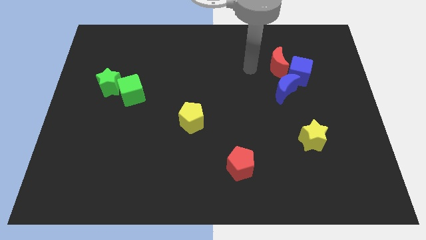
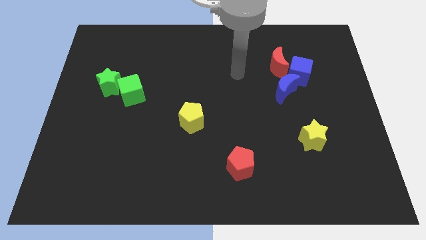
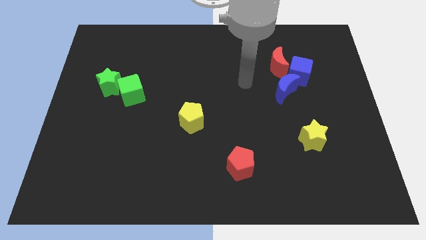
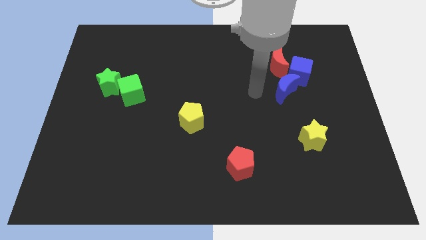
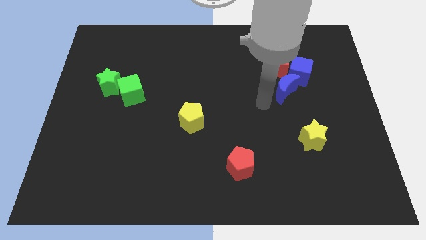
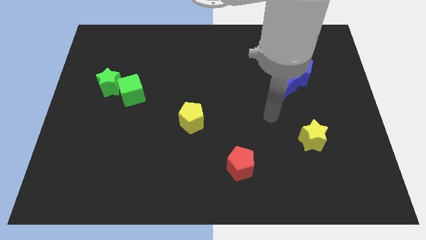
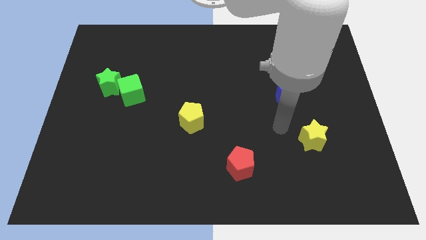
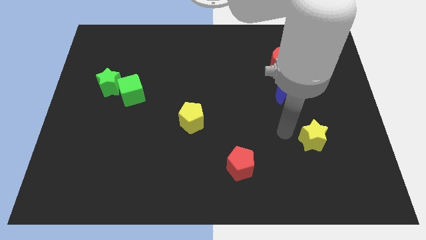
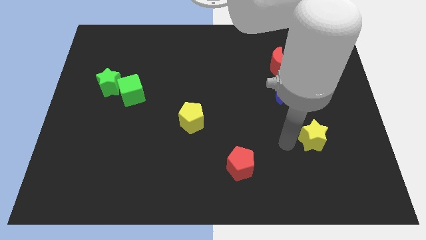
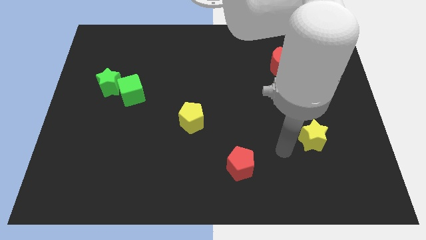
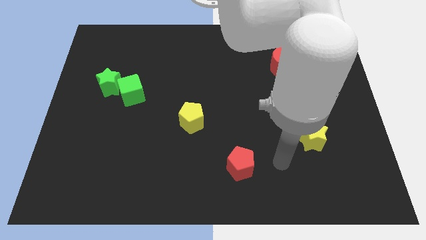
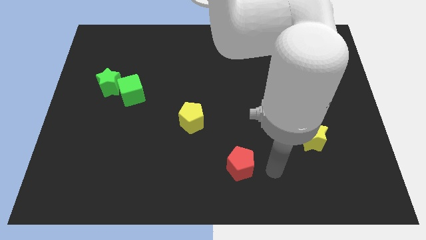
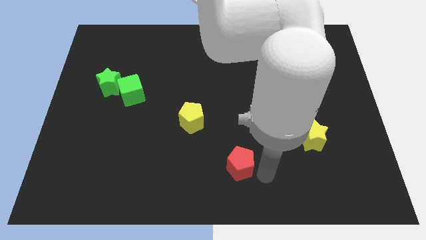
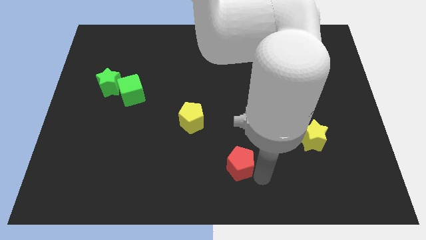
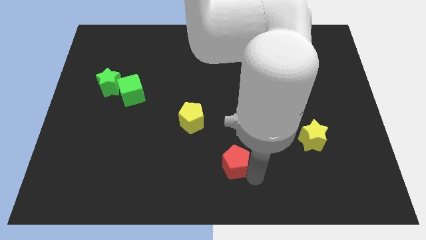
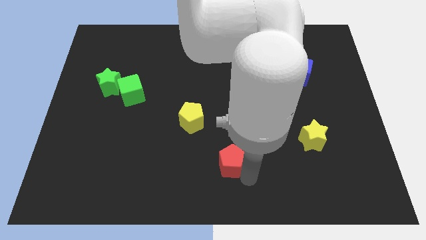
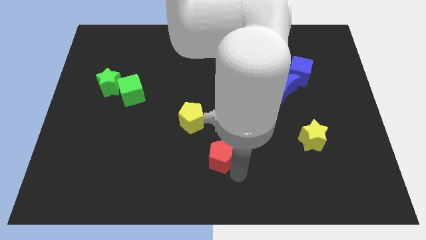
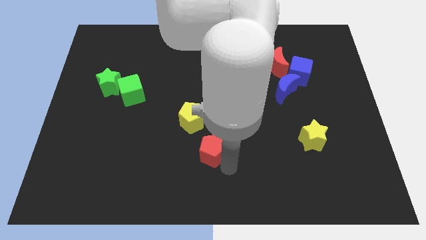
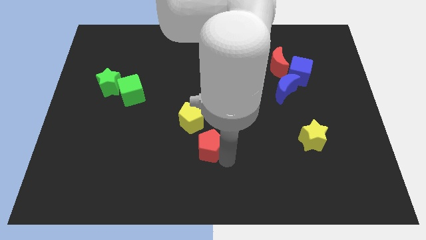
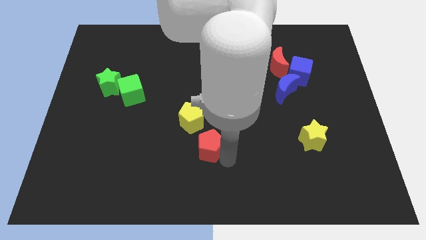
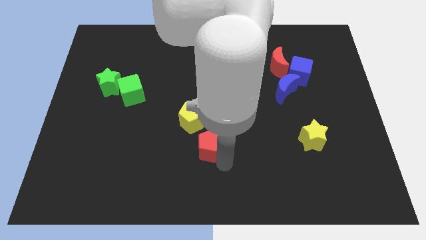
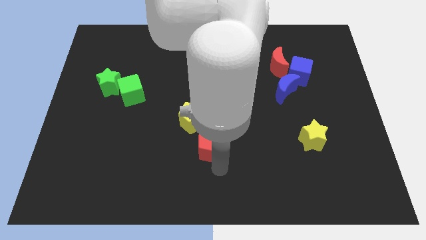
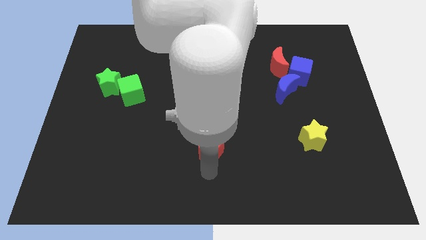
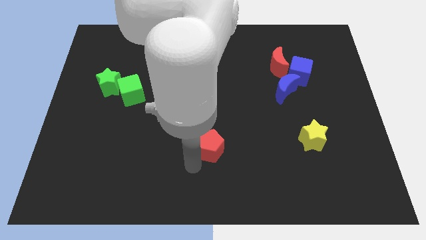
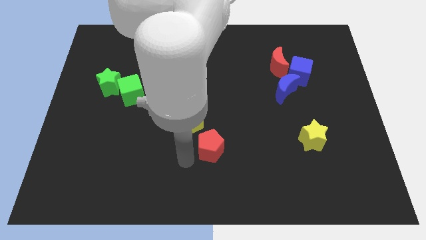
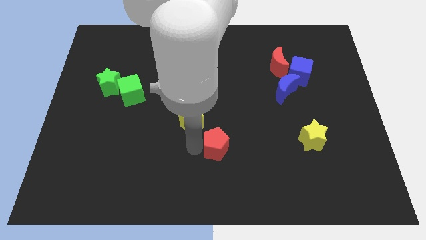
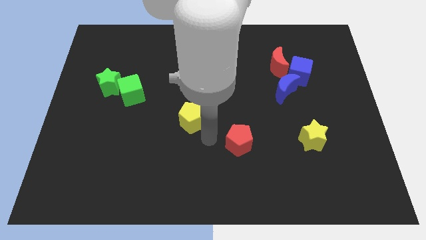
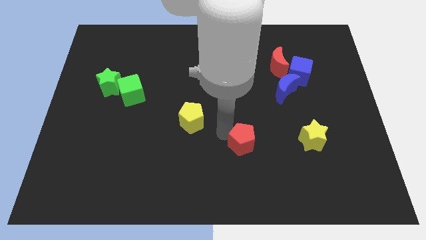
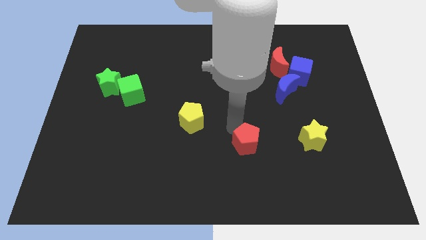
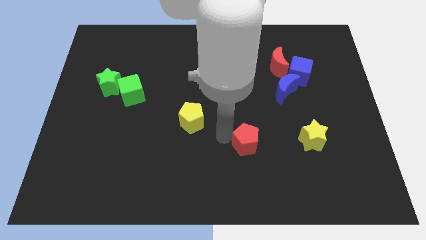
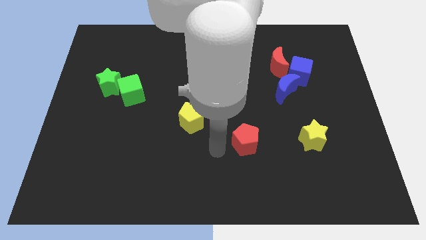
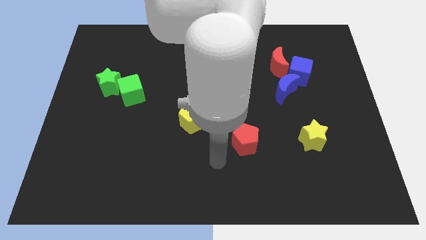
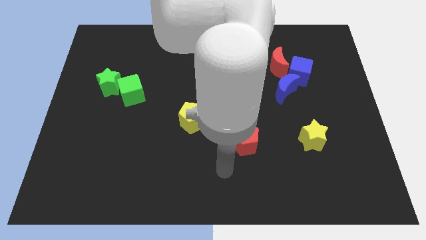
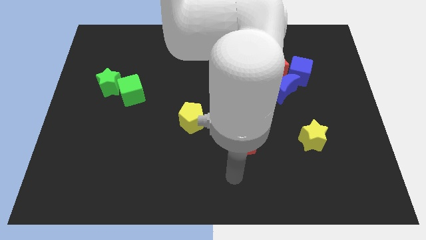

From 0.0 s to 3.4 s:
place red pentagon to the left of yelloe star

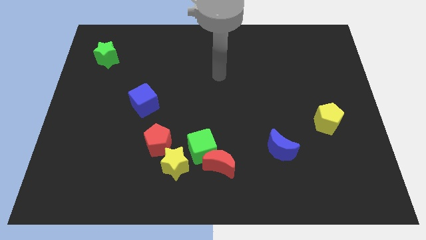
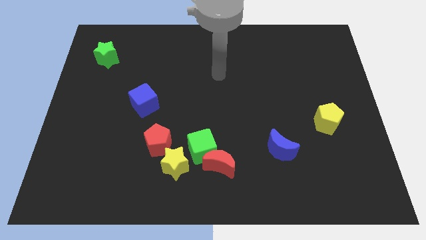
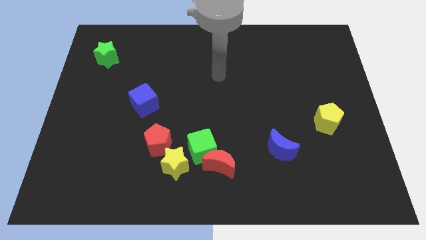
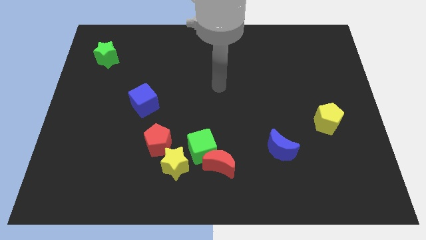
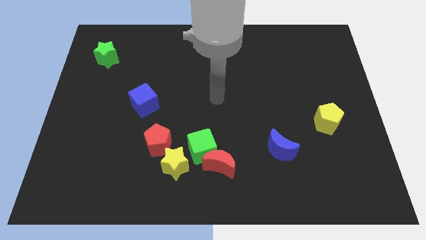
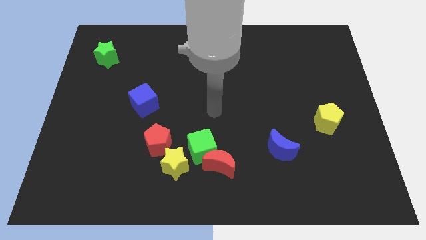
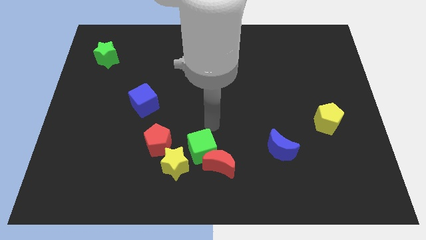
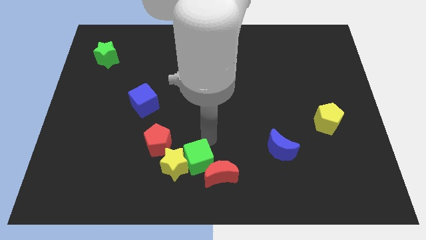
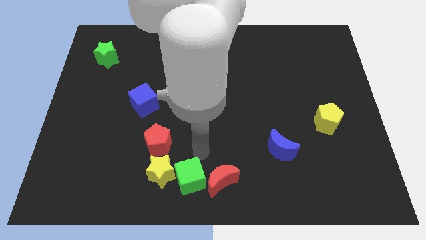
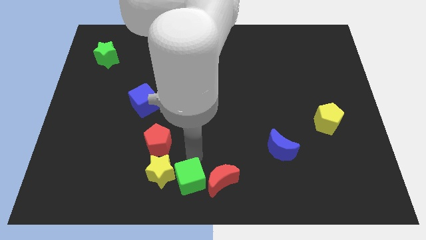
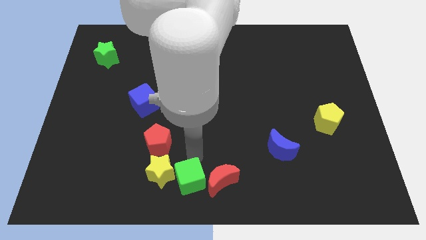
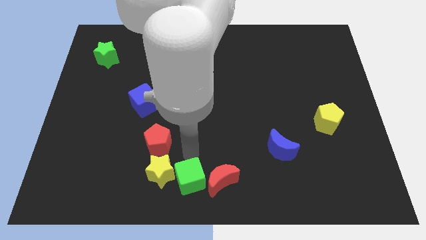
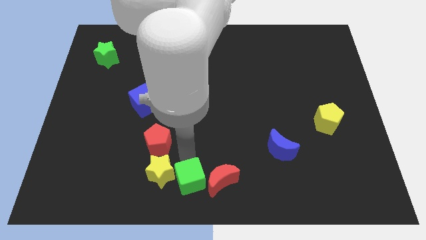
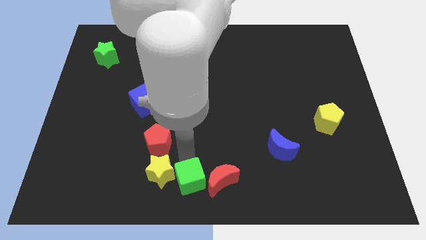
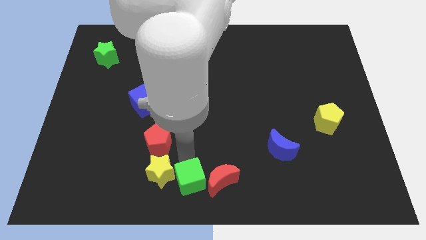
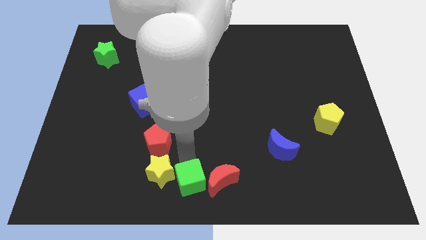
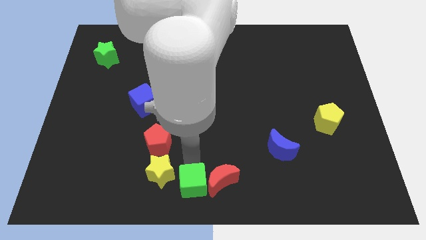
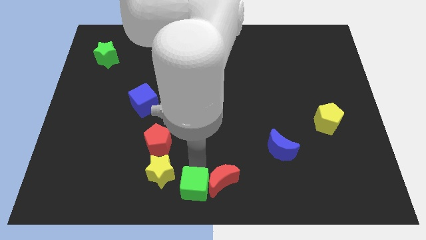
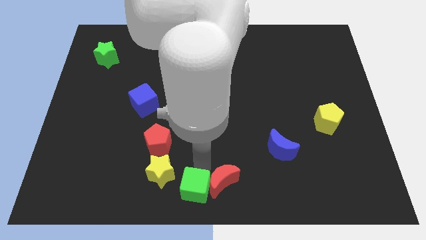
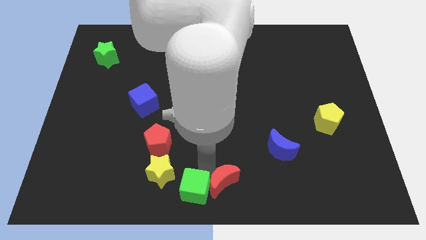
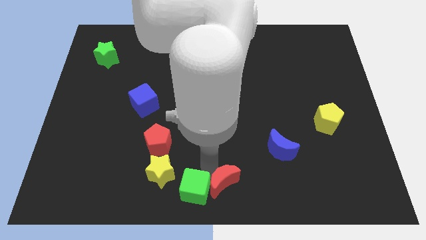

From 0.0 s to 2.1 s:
slide the green cube towards the bottom center

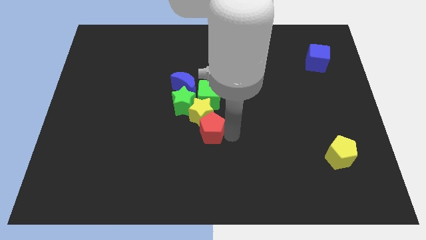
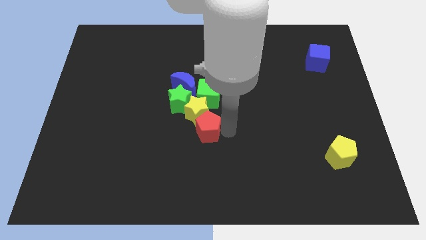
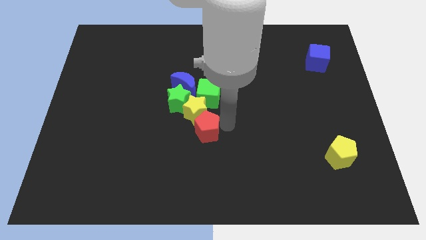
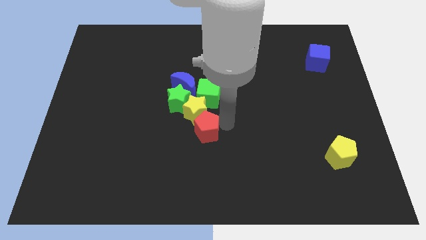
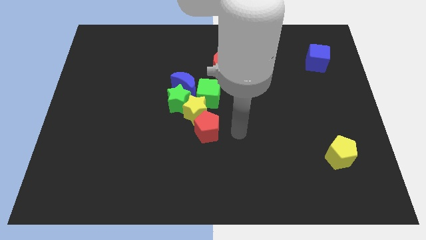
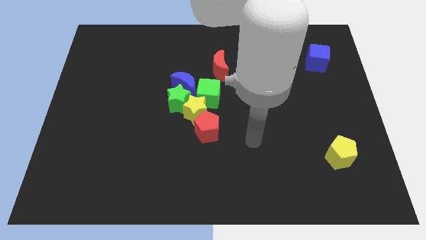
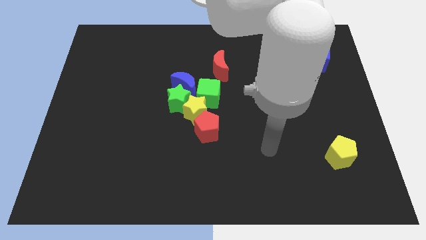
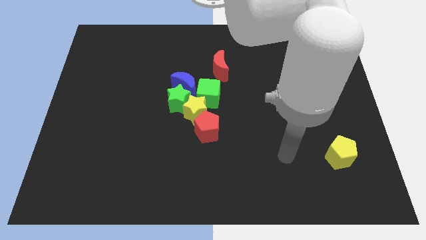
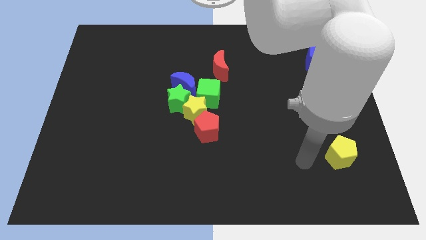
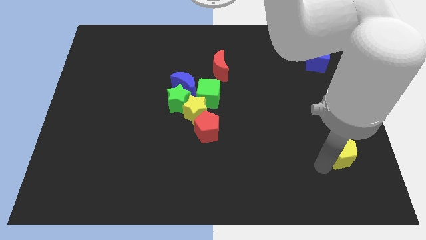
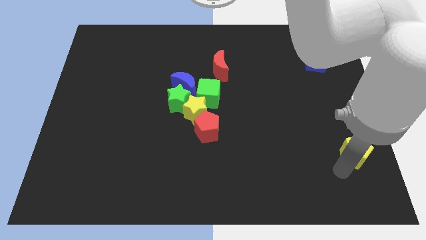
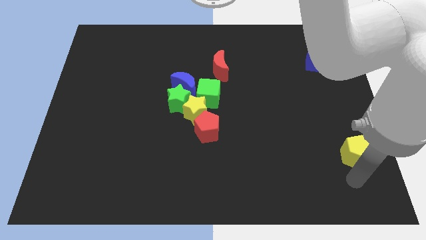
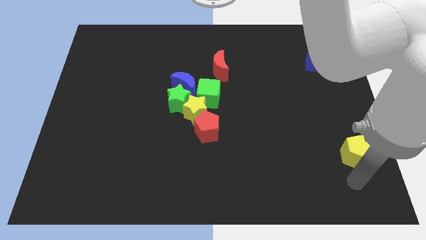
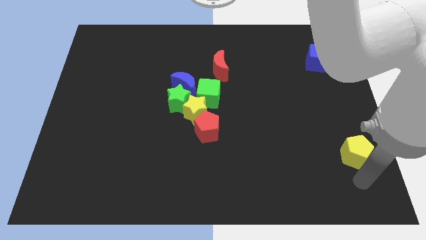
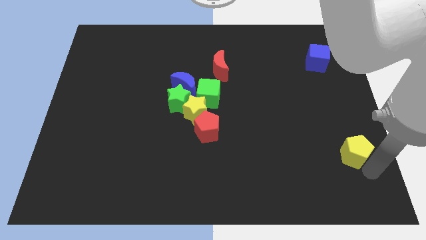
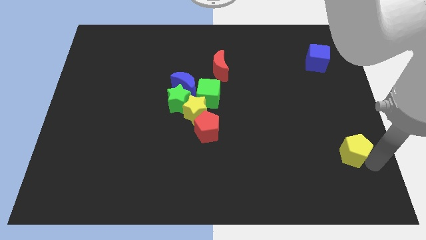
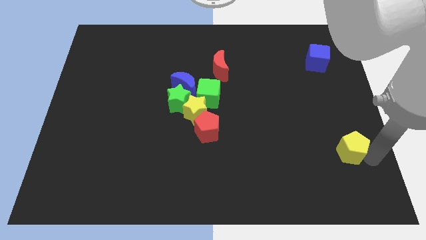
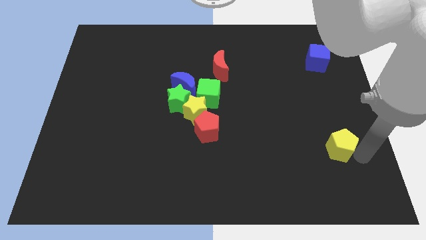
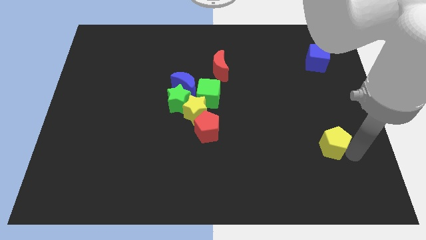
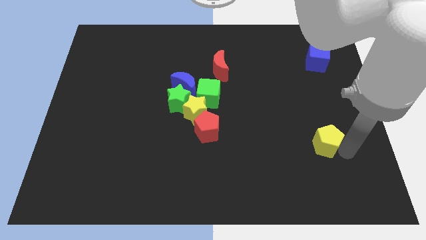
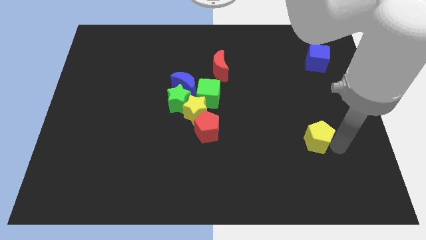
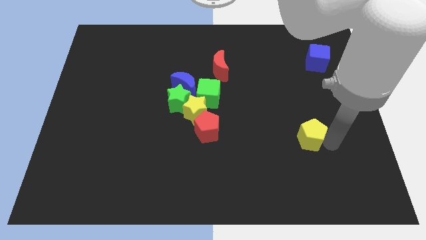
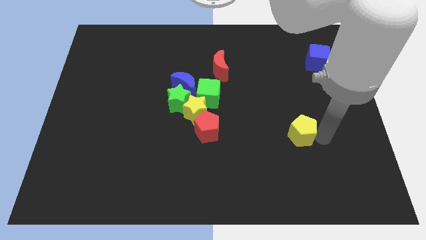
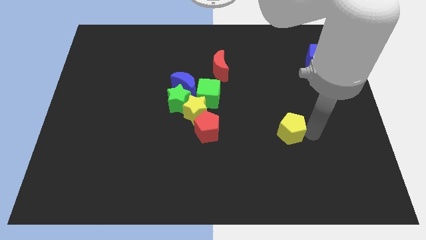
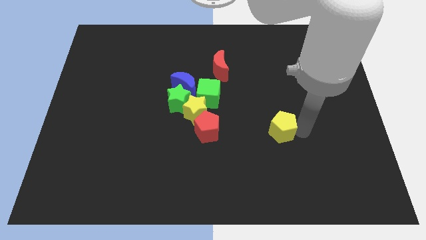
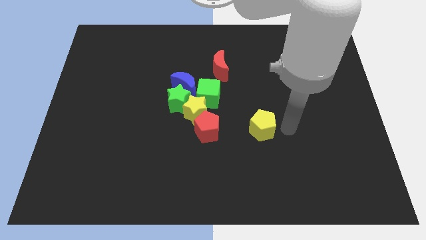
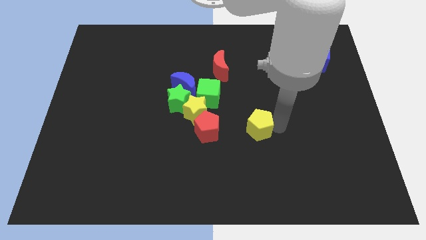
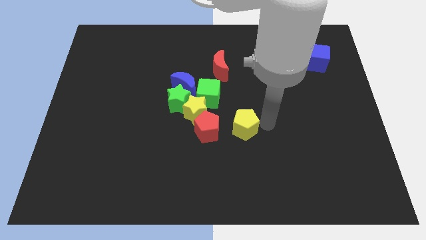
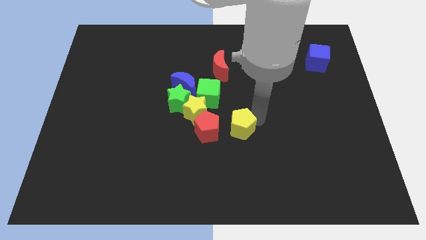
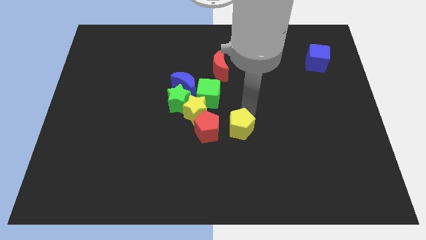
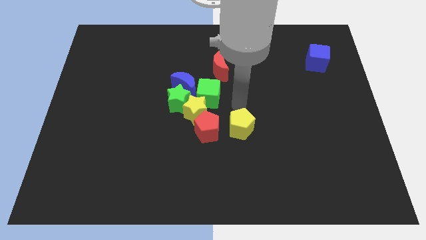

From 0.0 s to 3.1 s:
place the yellow pentagon to the right of red pentagon

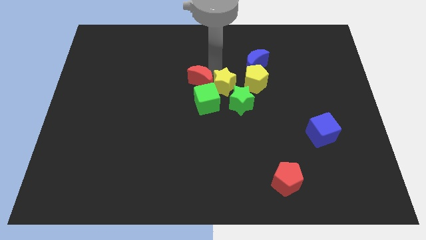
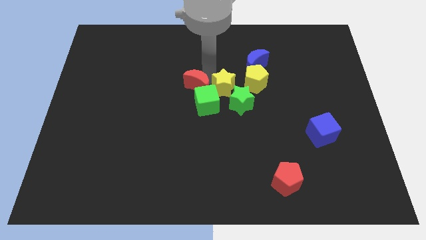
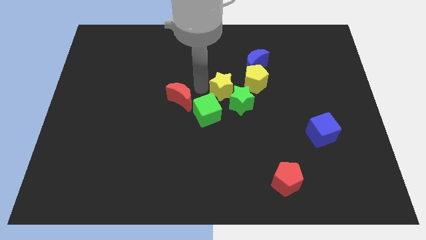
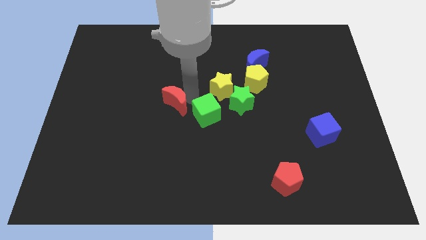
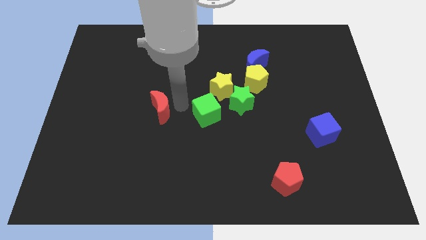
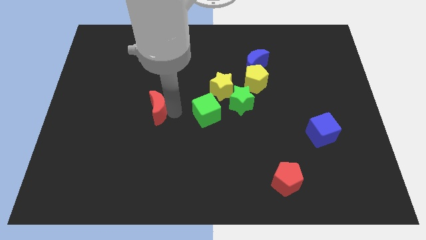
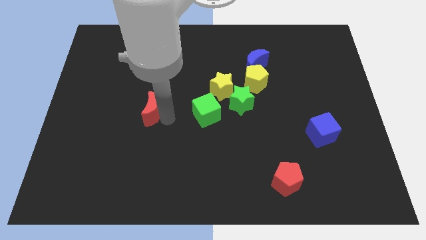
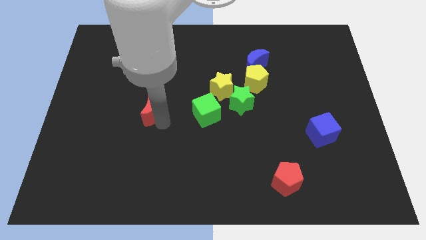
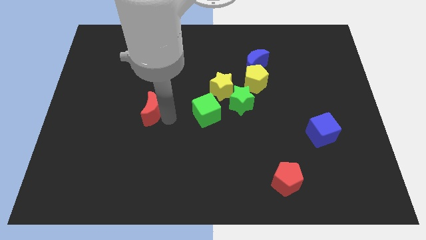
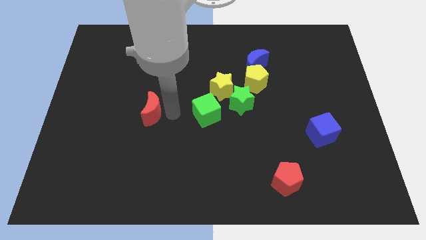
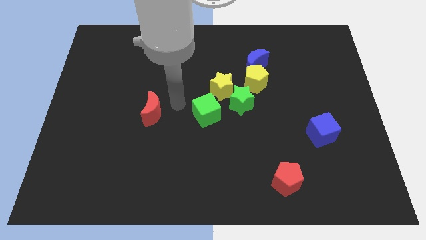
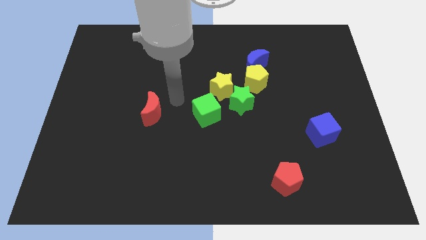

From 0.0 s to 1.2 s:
separate red crescent from yellow star and green cube
